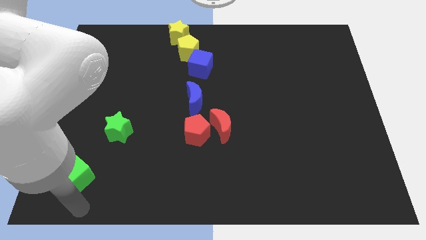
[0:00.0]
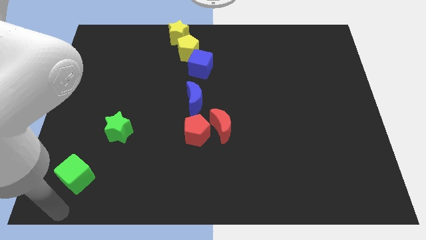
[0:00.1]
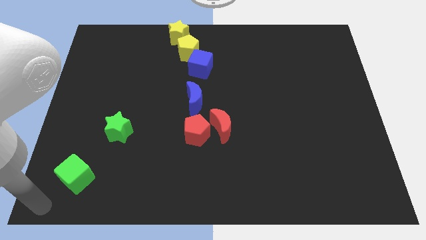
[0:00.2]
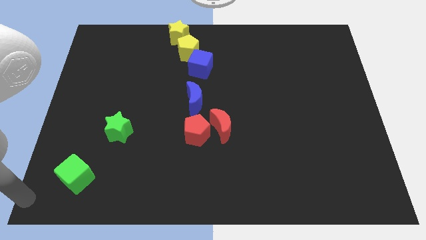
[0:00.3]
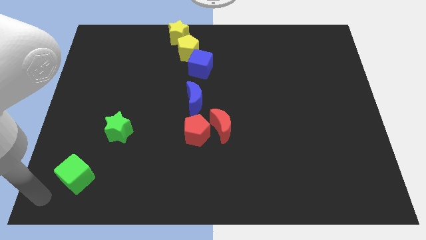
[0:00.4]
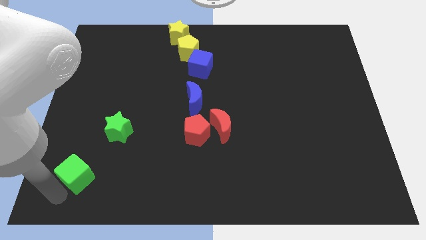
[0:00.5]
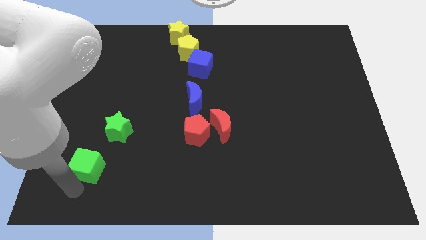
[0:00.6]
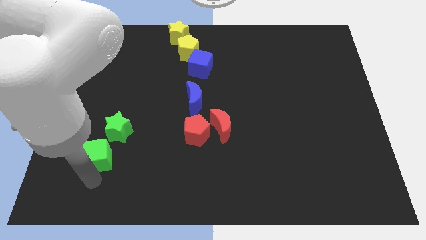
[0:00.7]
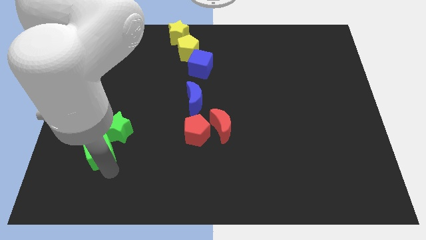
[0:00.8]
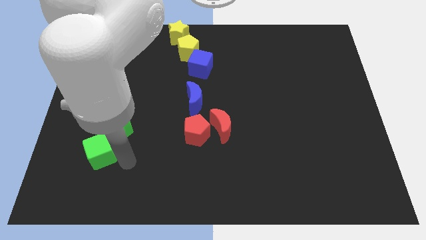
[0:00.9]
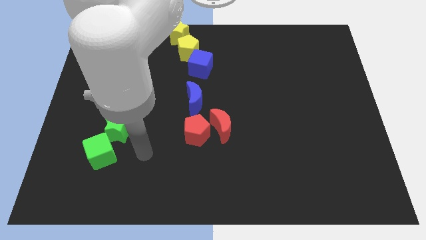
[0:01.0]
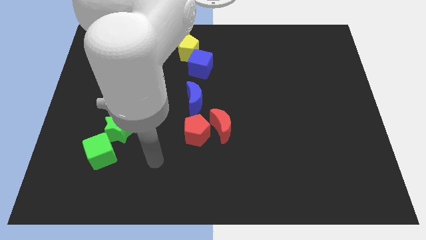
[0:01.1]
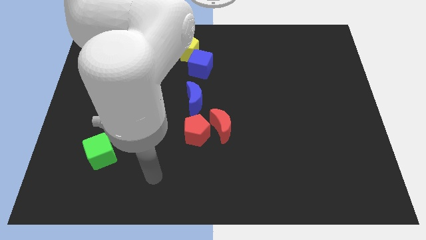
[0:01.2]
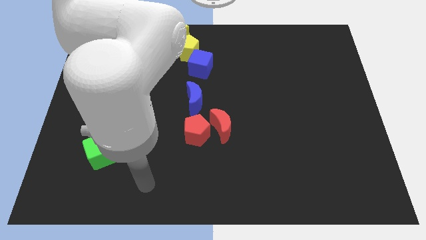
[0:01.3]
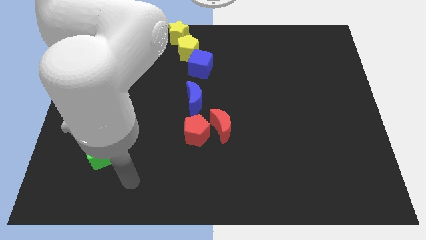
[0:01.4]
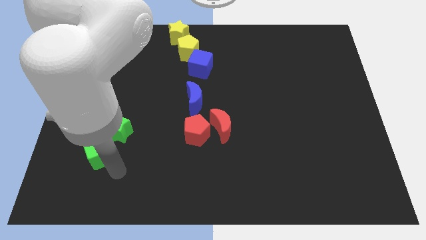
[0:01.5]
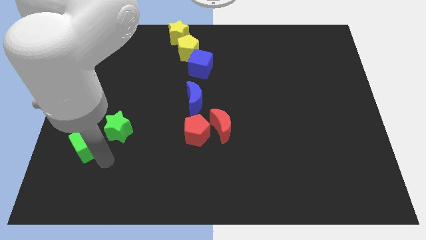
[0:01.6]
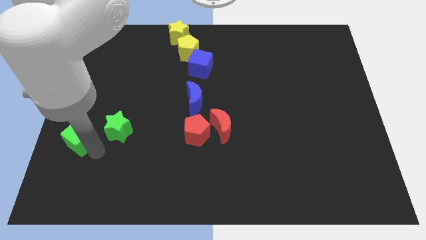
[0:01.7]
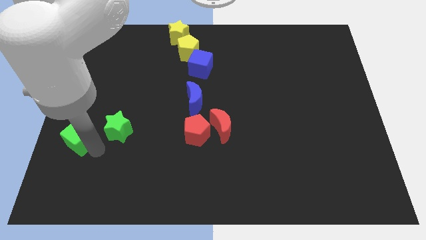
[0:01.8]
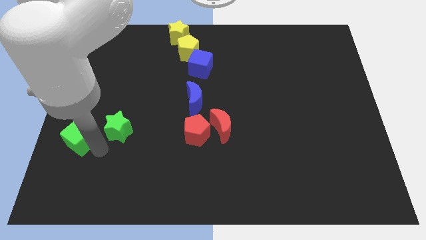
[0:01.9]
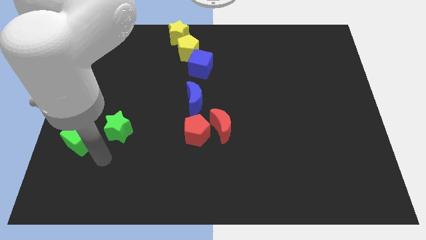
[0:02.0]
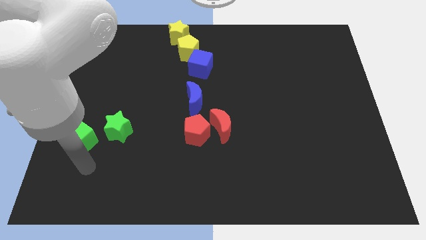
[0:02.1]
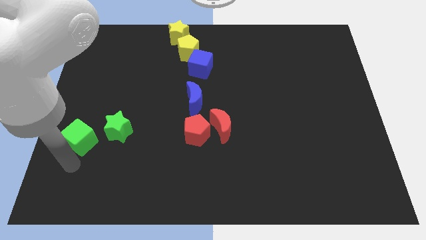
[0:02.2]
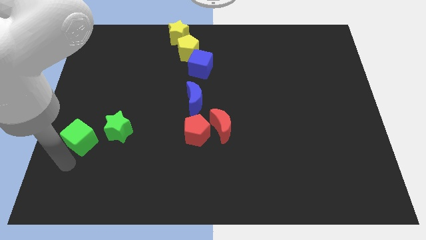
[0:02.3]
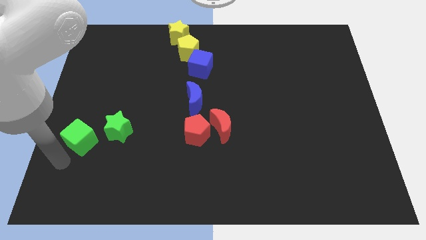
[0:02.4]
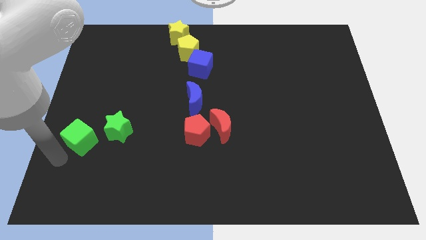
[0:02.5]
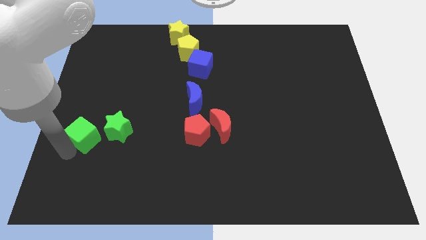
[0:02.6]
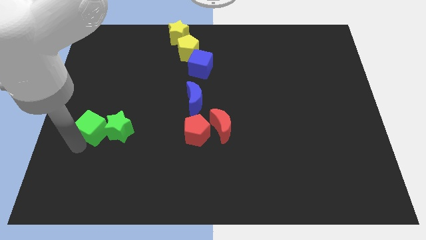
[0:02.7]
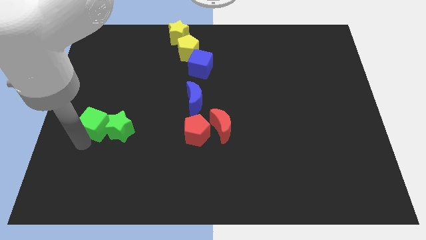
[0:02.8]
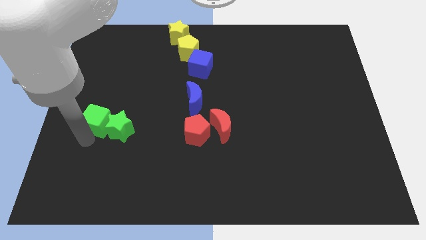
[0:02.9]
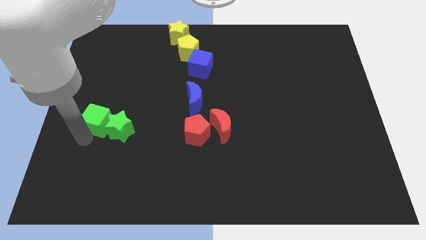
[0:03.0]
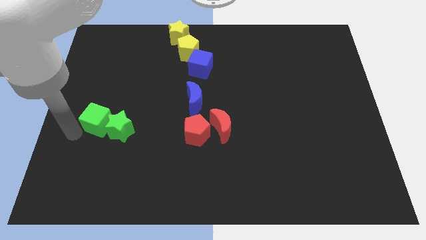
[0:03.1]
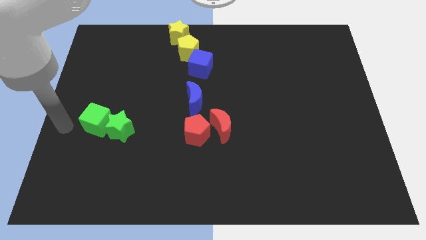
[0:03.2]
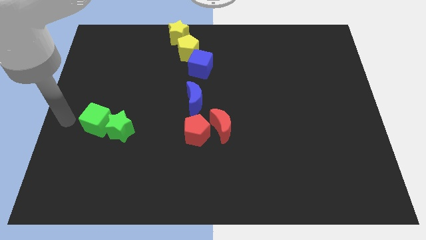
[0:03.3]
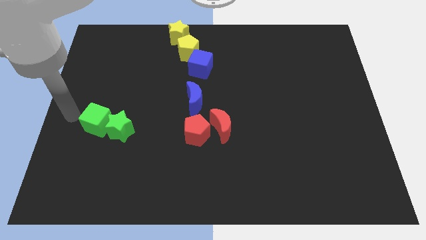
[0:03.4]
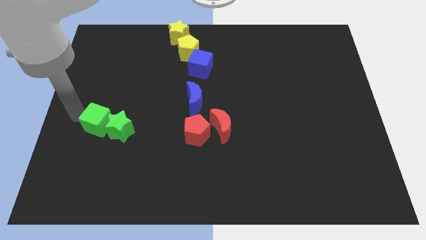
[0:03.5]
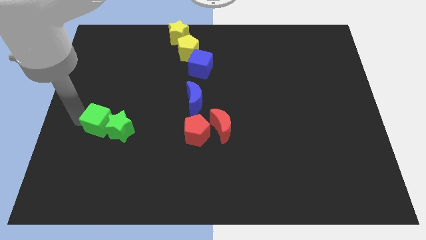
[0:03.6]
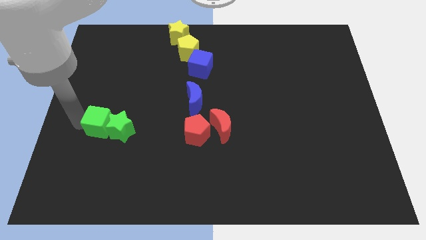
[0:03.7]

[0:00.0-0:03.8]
push the green cube to the left of the green star

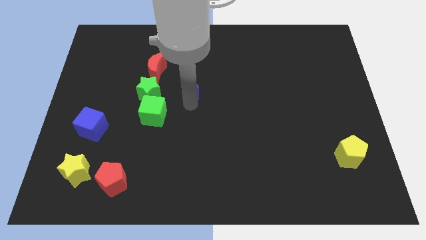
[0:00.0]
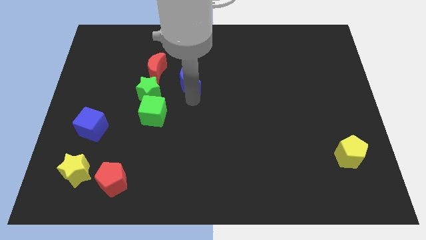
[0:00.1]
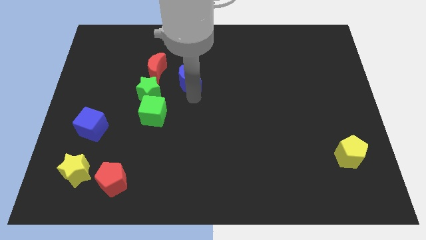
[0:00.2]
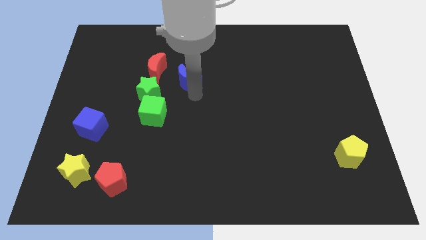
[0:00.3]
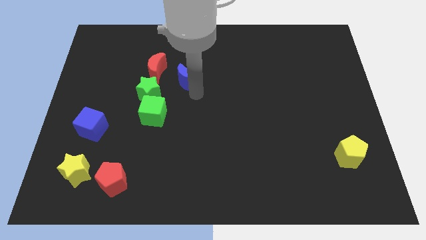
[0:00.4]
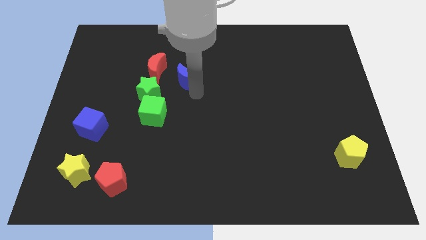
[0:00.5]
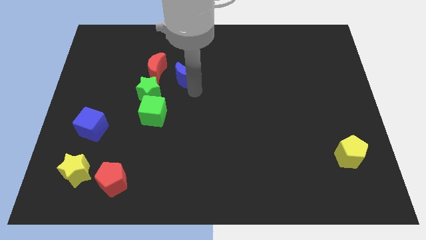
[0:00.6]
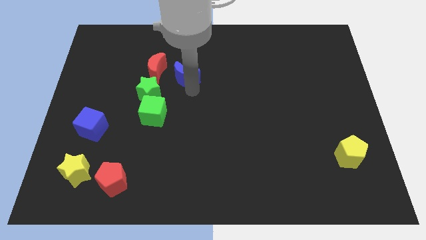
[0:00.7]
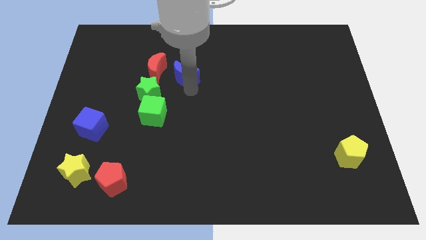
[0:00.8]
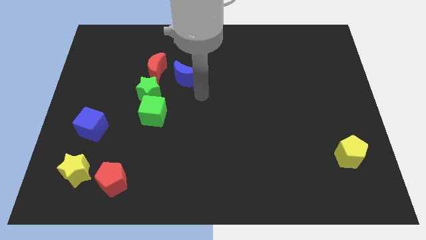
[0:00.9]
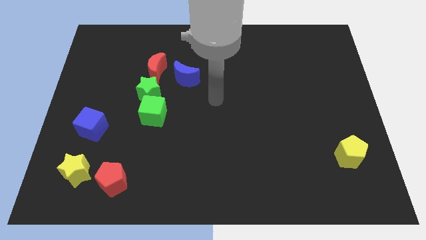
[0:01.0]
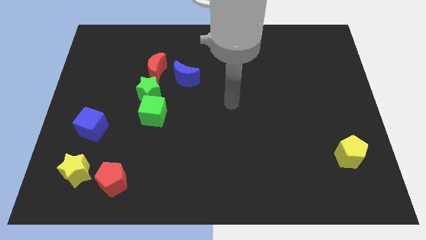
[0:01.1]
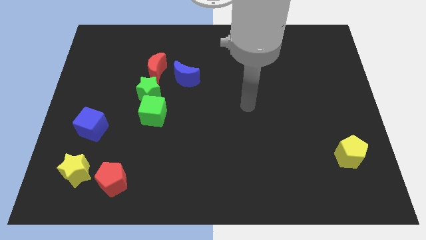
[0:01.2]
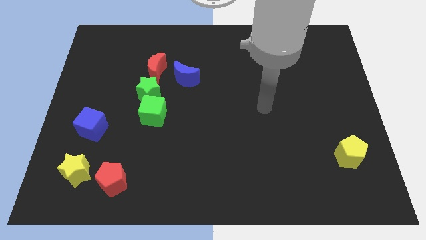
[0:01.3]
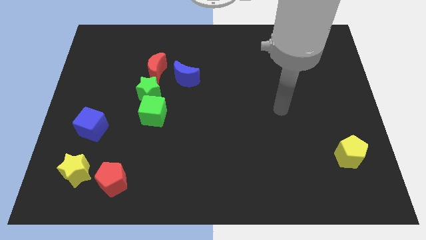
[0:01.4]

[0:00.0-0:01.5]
place the blue crescent to the right of the red crescent

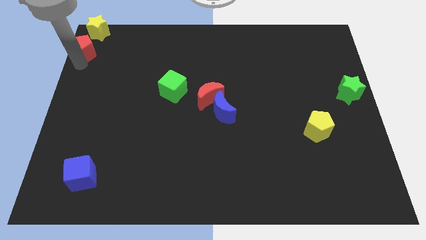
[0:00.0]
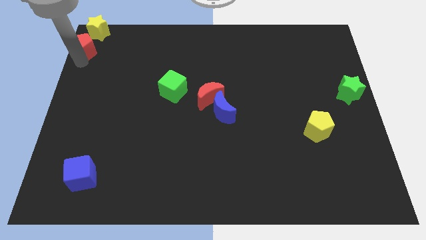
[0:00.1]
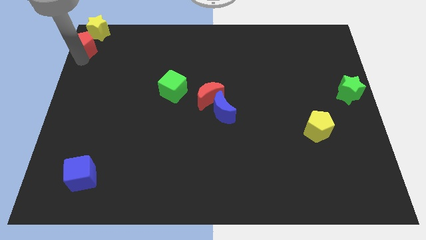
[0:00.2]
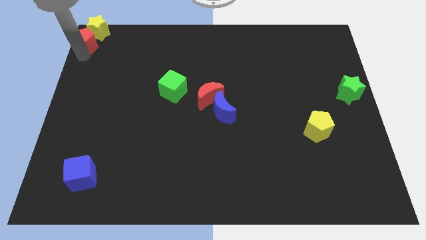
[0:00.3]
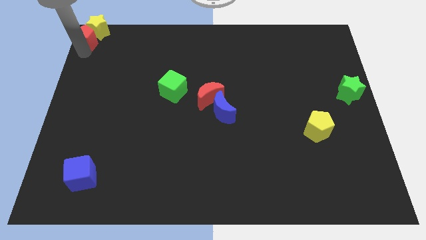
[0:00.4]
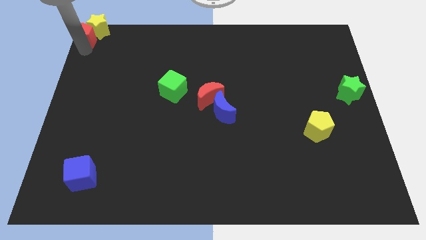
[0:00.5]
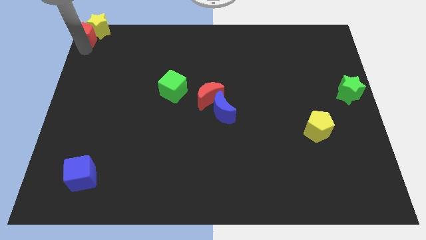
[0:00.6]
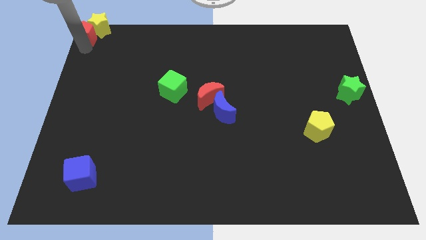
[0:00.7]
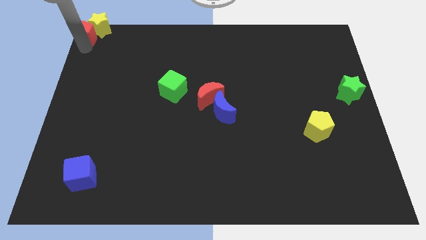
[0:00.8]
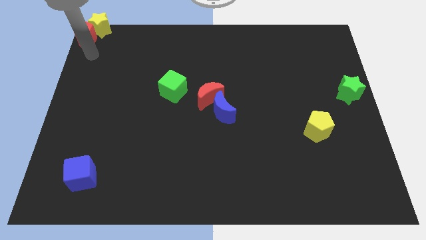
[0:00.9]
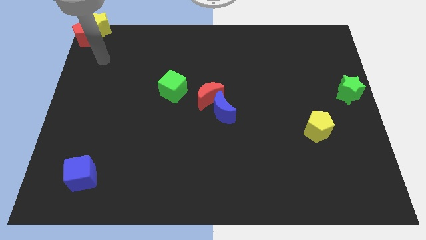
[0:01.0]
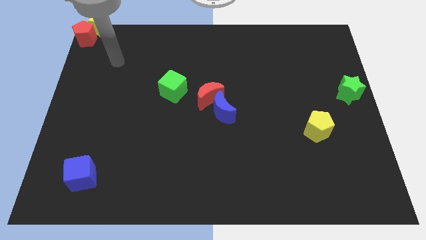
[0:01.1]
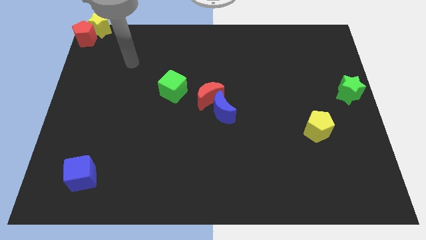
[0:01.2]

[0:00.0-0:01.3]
push the red pentagon into the yellow star

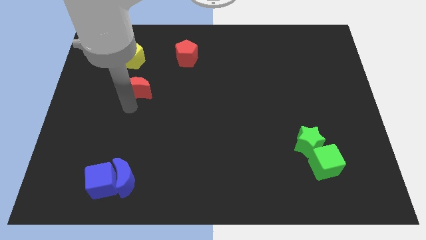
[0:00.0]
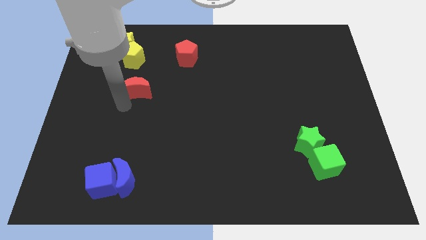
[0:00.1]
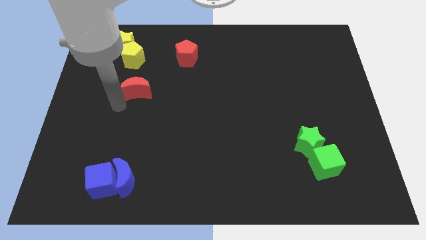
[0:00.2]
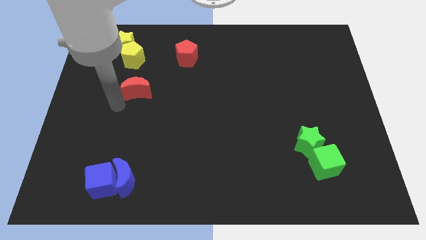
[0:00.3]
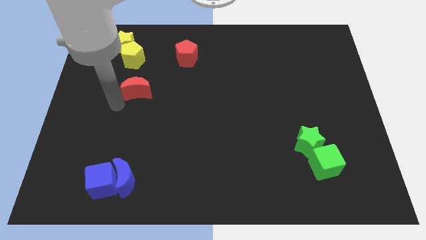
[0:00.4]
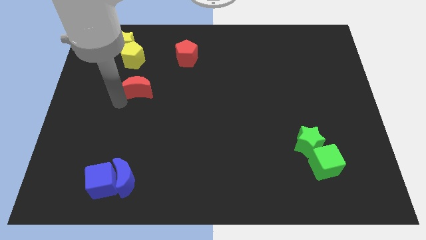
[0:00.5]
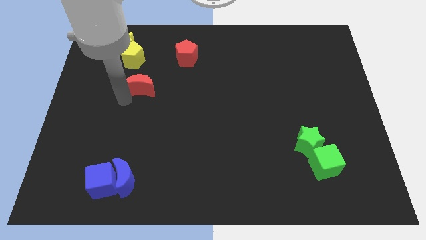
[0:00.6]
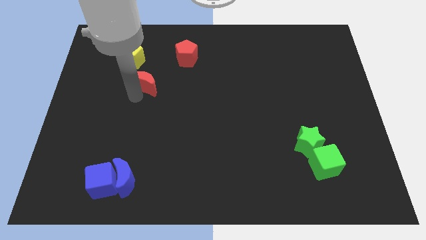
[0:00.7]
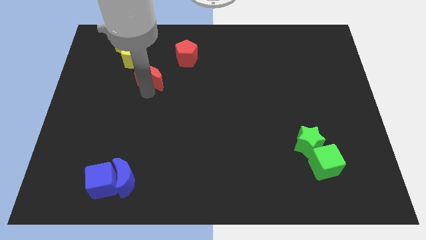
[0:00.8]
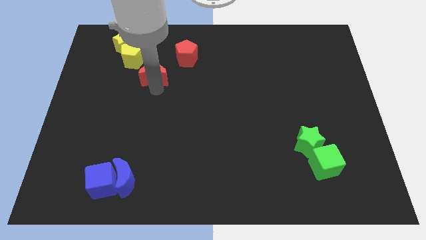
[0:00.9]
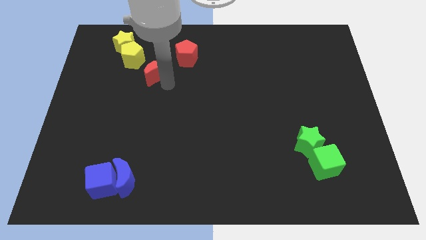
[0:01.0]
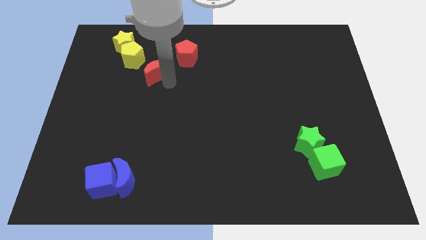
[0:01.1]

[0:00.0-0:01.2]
move red moon slightly to the top side

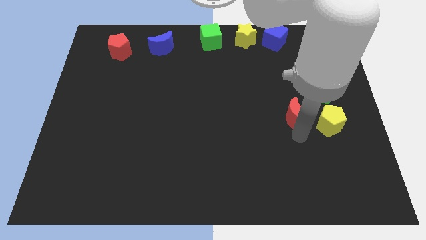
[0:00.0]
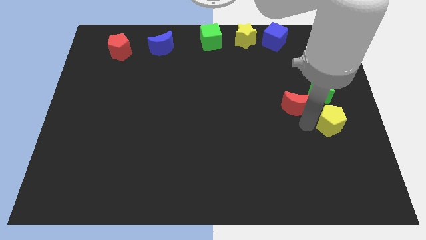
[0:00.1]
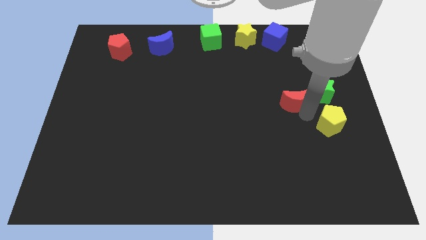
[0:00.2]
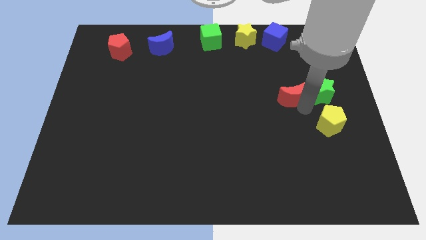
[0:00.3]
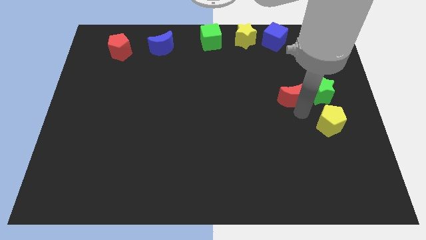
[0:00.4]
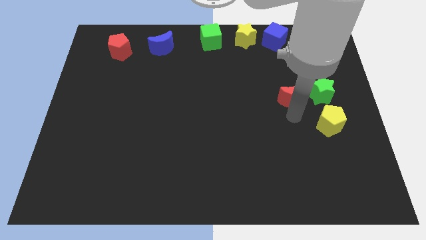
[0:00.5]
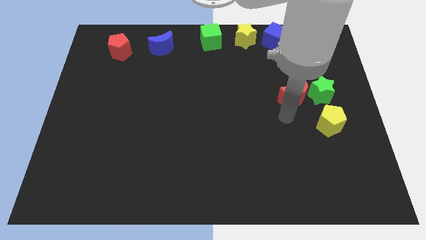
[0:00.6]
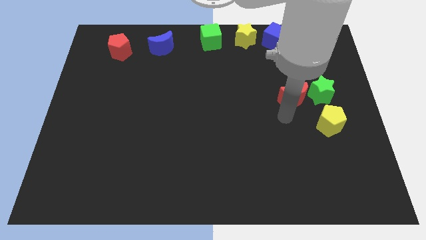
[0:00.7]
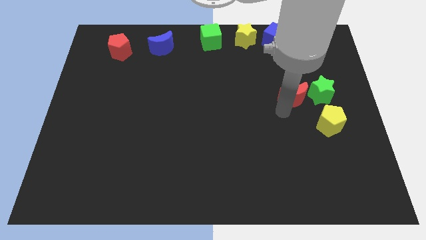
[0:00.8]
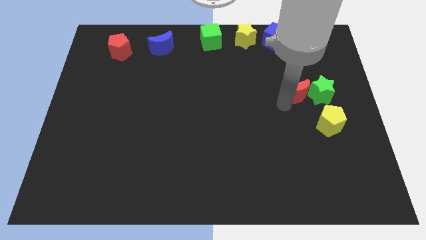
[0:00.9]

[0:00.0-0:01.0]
move the red crescent into the green star

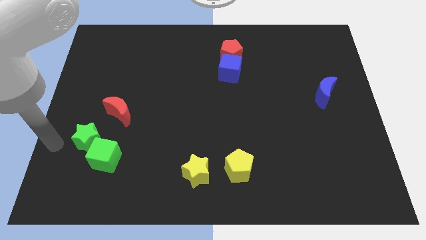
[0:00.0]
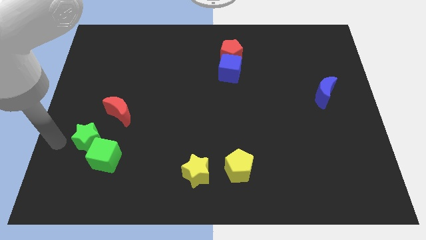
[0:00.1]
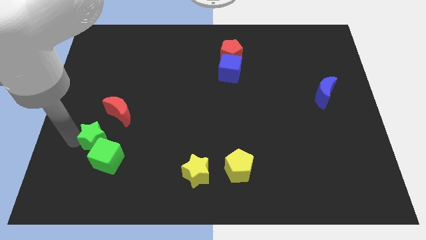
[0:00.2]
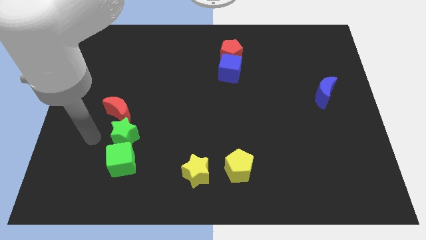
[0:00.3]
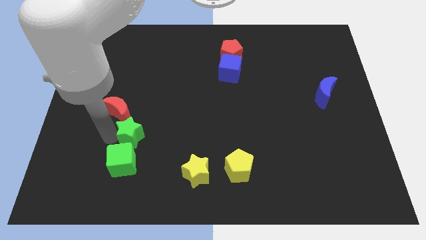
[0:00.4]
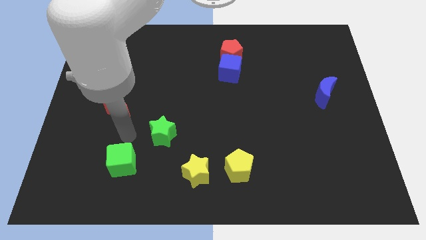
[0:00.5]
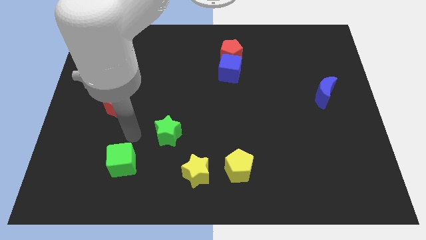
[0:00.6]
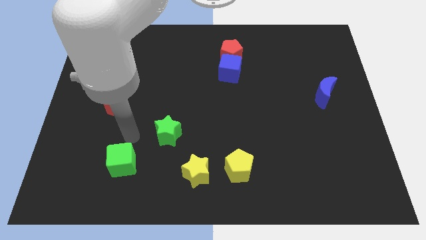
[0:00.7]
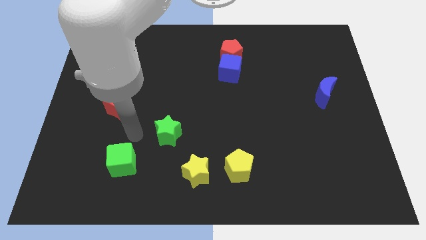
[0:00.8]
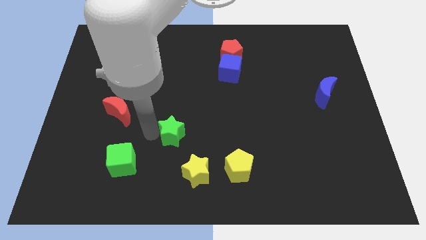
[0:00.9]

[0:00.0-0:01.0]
separate the green star and green cube
